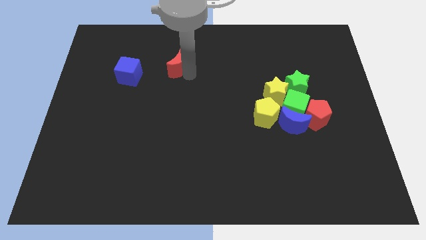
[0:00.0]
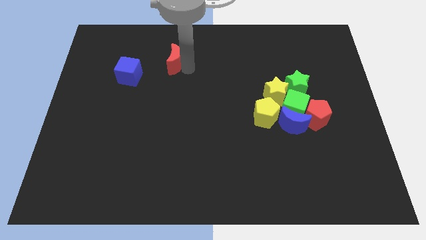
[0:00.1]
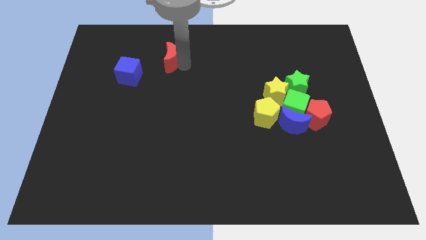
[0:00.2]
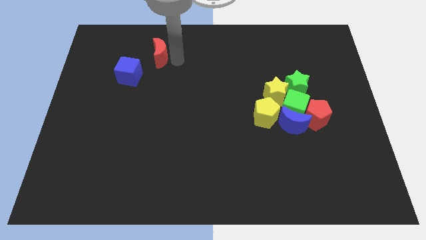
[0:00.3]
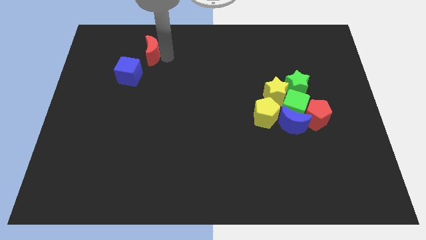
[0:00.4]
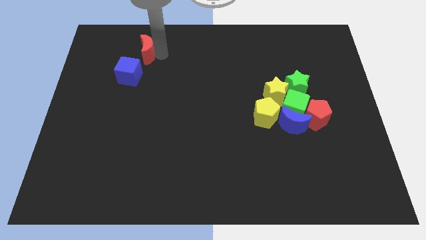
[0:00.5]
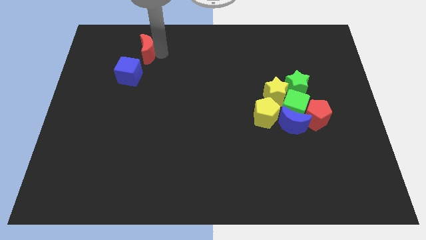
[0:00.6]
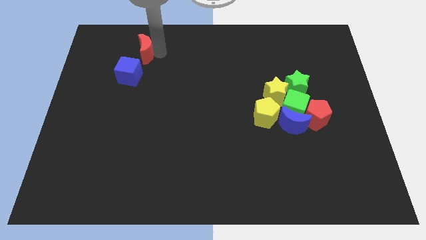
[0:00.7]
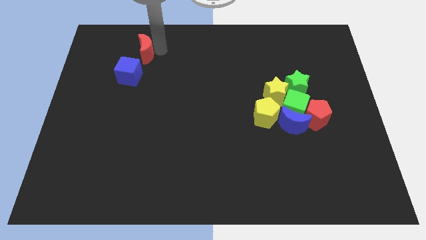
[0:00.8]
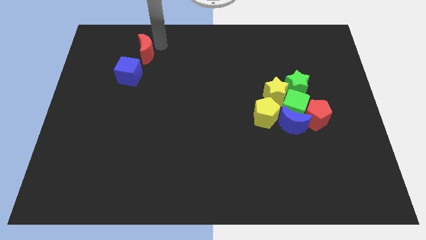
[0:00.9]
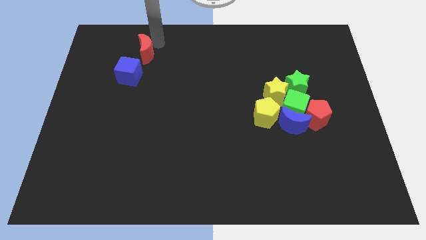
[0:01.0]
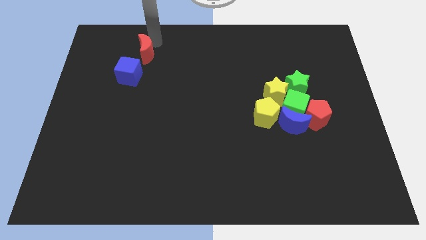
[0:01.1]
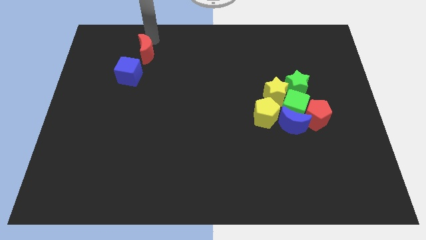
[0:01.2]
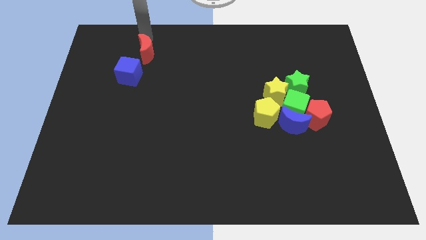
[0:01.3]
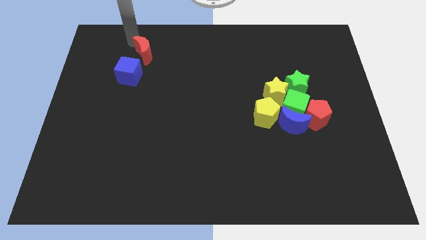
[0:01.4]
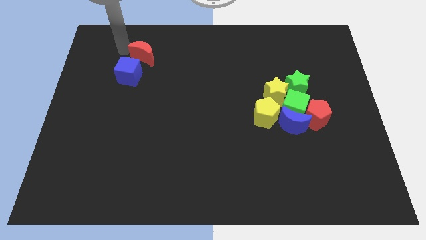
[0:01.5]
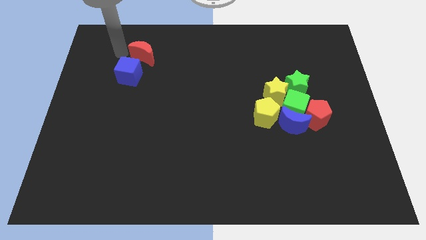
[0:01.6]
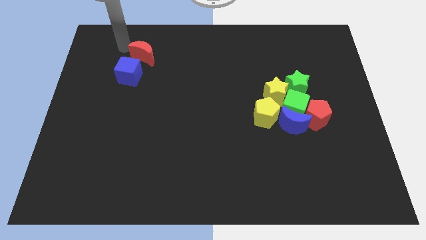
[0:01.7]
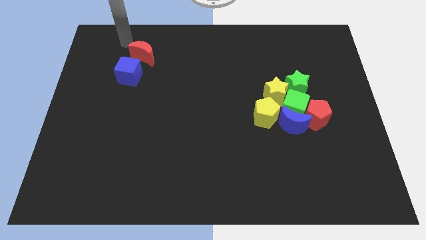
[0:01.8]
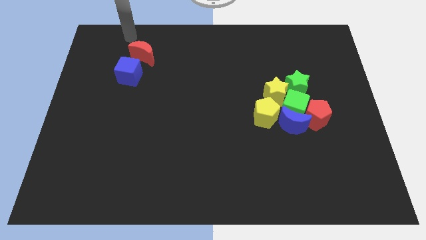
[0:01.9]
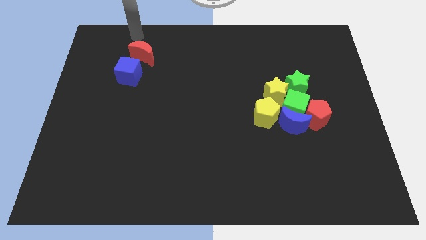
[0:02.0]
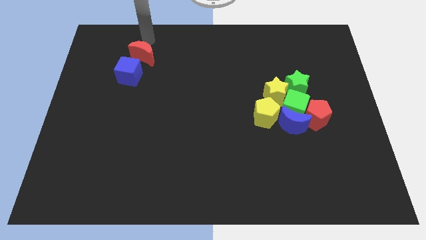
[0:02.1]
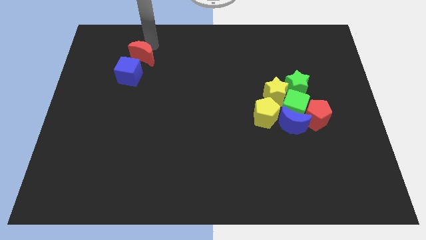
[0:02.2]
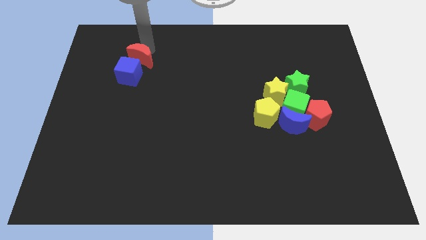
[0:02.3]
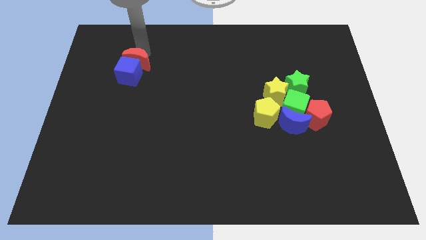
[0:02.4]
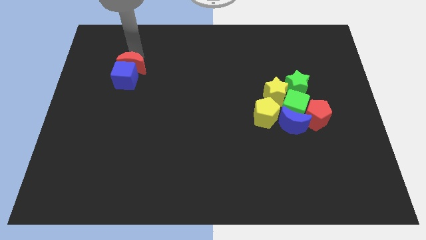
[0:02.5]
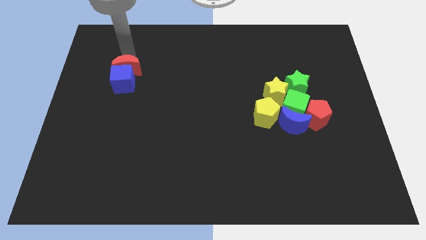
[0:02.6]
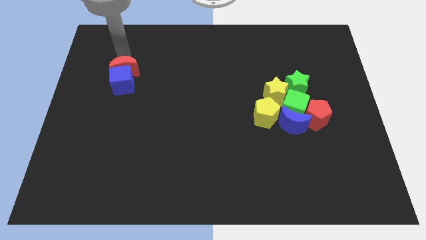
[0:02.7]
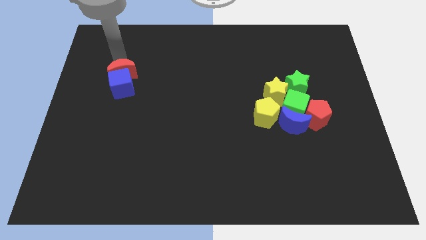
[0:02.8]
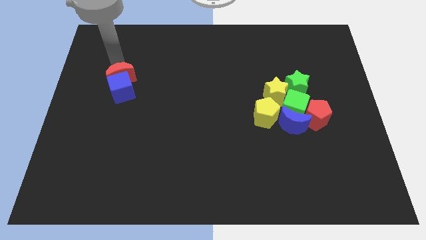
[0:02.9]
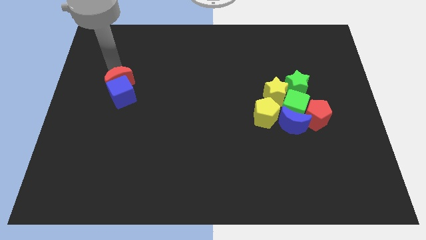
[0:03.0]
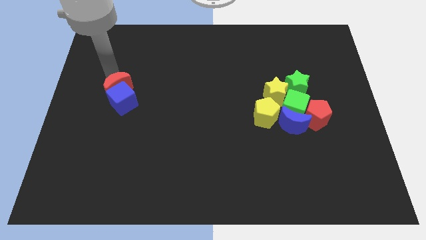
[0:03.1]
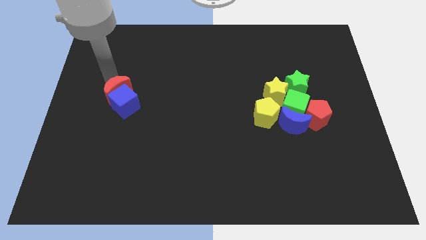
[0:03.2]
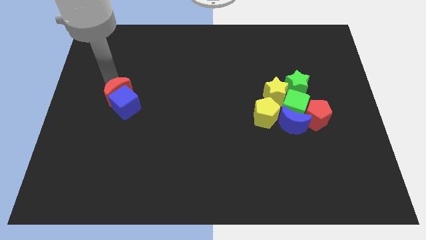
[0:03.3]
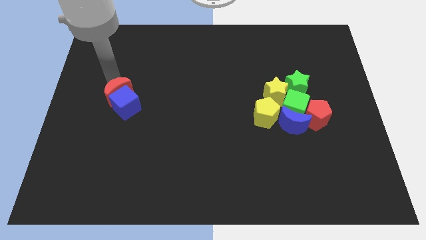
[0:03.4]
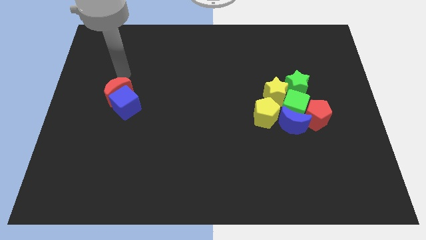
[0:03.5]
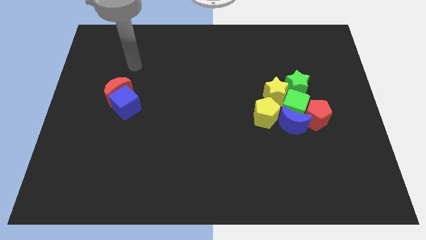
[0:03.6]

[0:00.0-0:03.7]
push the red crescent into the blue cube

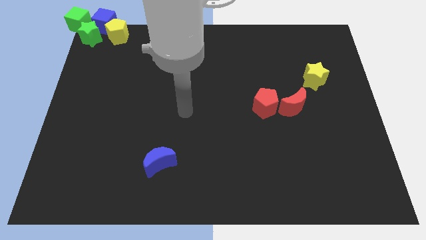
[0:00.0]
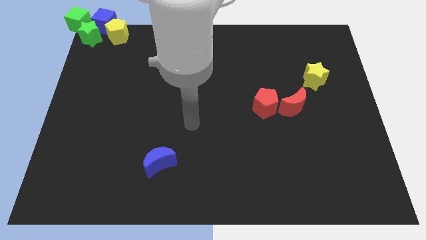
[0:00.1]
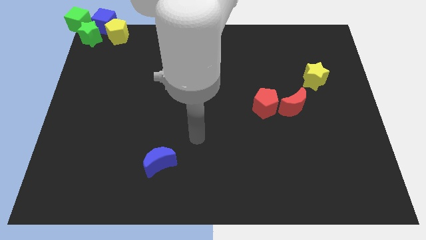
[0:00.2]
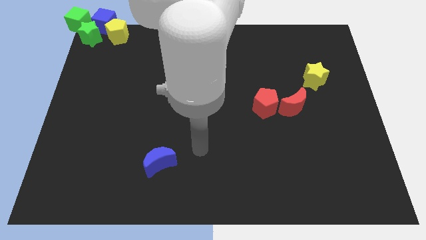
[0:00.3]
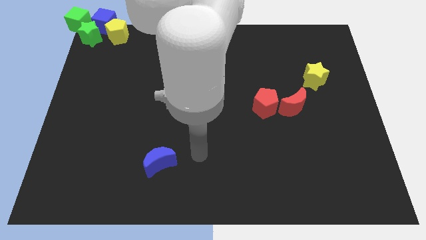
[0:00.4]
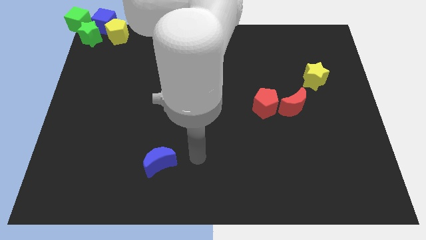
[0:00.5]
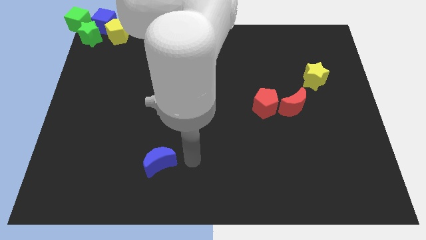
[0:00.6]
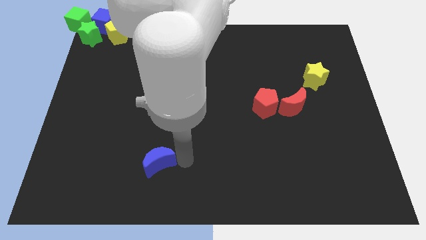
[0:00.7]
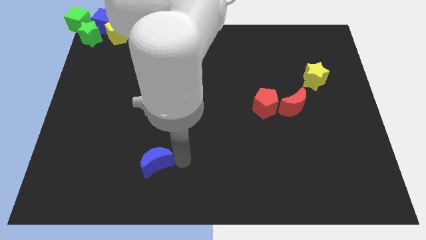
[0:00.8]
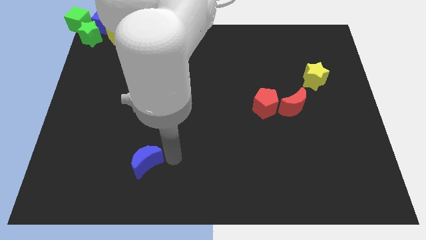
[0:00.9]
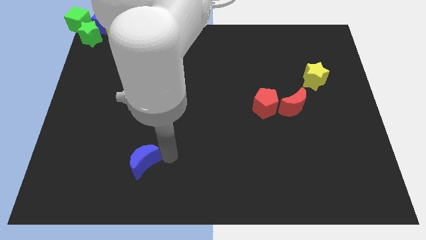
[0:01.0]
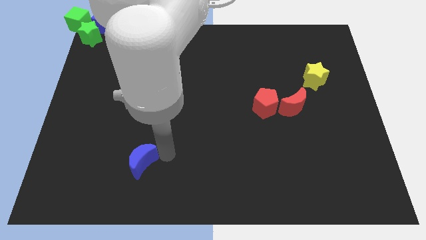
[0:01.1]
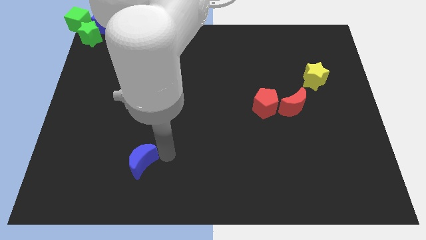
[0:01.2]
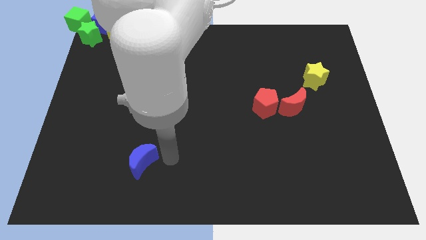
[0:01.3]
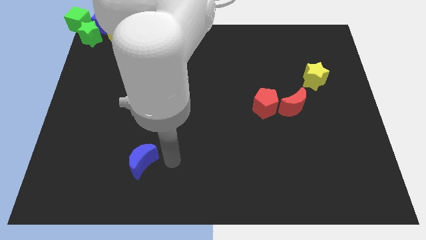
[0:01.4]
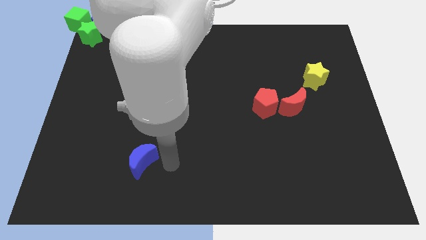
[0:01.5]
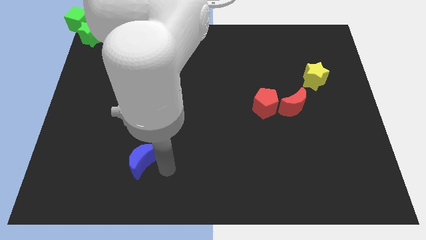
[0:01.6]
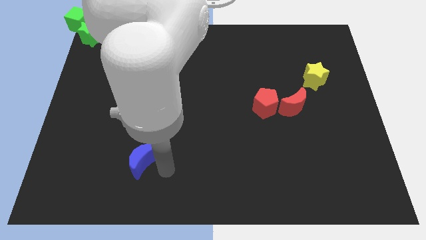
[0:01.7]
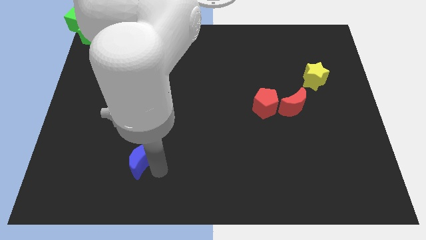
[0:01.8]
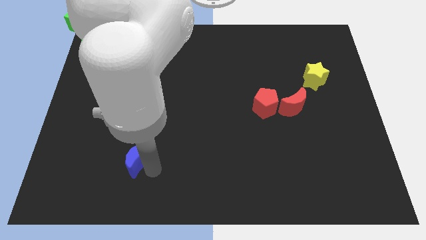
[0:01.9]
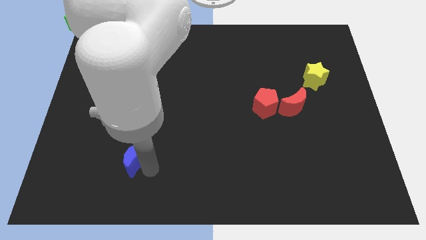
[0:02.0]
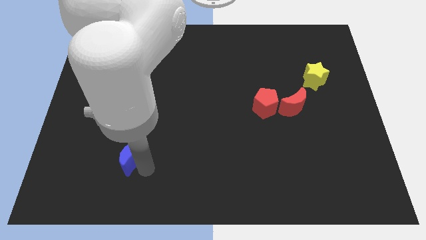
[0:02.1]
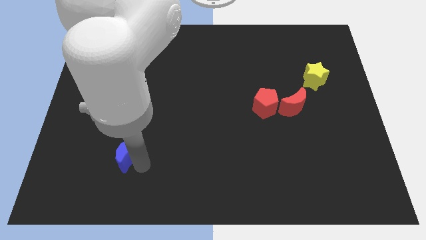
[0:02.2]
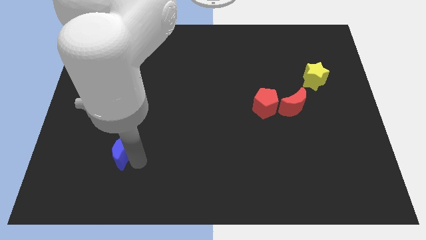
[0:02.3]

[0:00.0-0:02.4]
slightly push the blue crescent to the left side of your arm

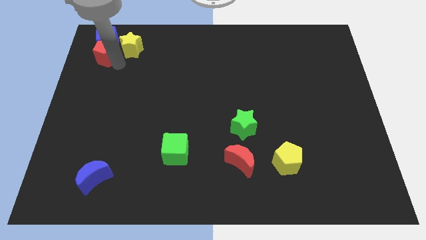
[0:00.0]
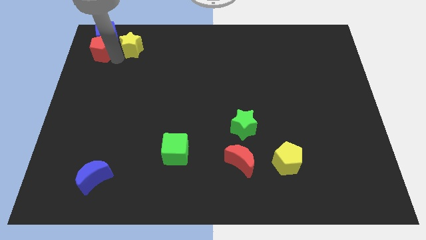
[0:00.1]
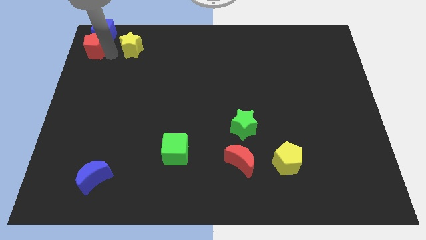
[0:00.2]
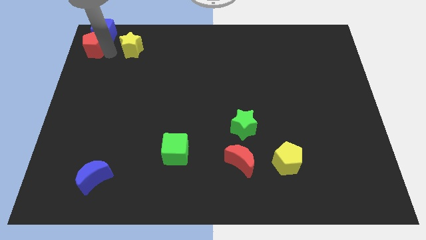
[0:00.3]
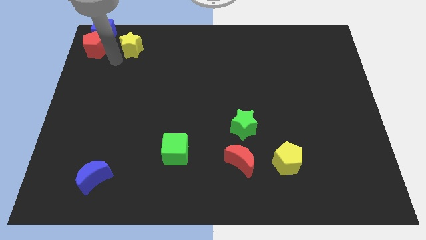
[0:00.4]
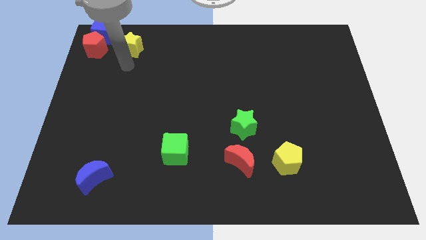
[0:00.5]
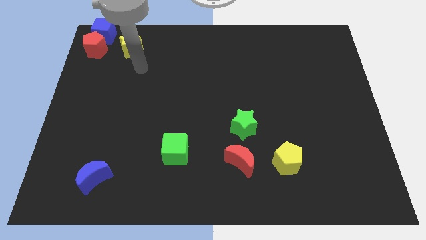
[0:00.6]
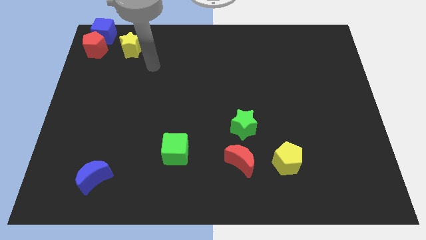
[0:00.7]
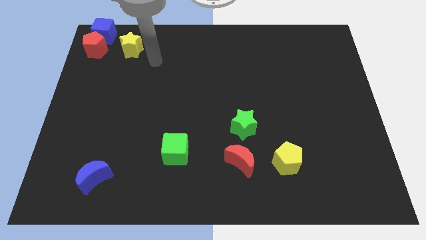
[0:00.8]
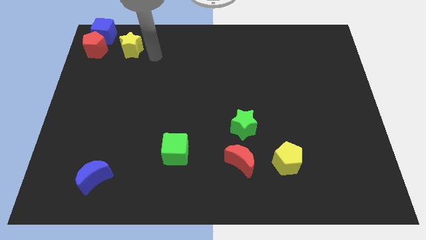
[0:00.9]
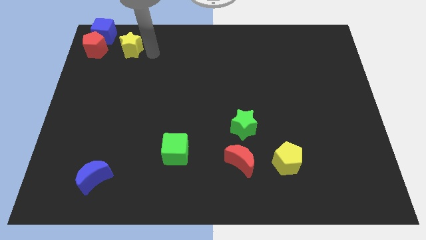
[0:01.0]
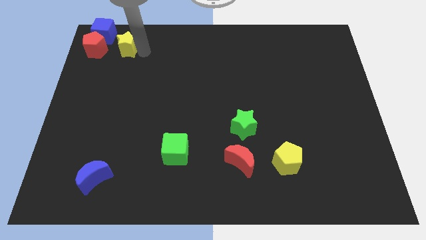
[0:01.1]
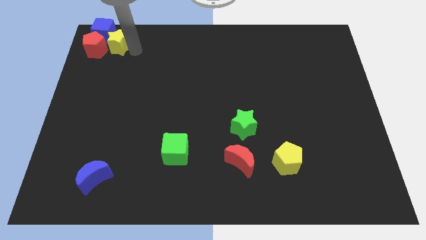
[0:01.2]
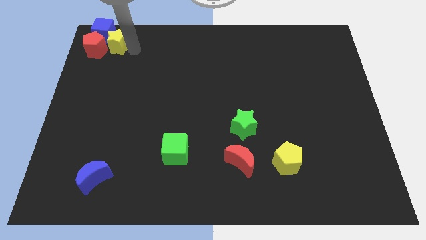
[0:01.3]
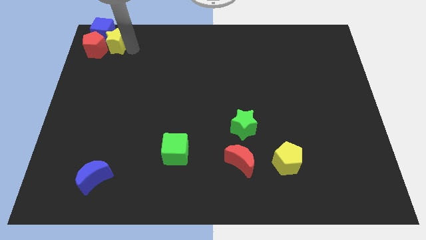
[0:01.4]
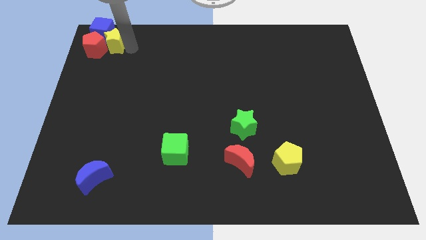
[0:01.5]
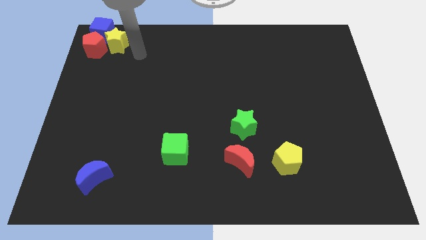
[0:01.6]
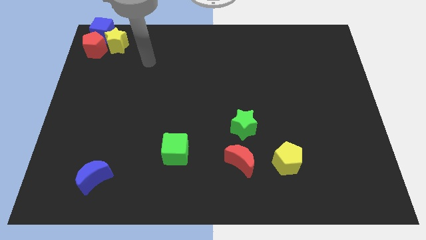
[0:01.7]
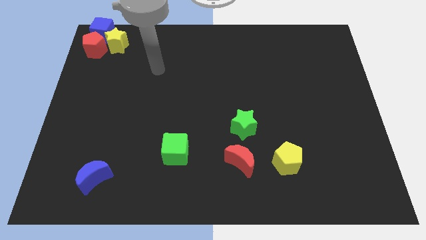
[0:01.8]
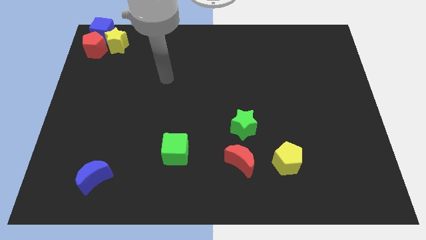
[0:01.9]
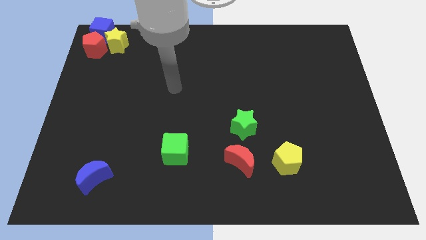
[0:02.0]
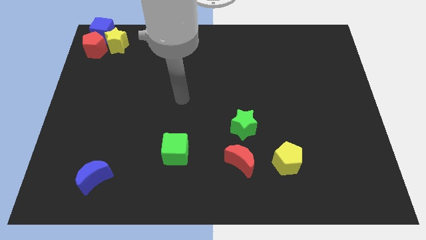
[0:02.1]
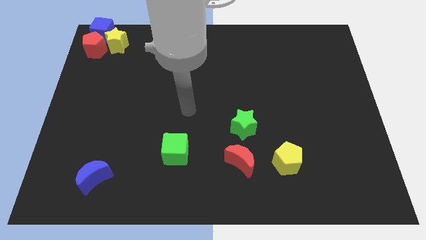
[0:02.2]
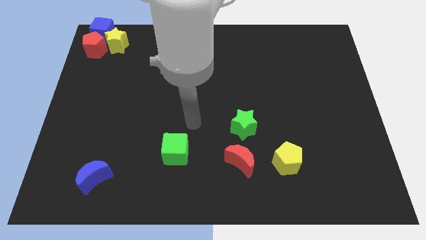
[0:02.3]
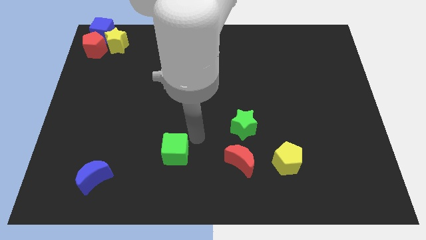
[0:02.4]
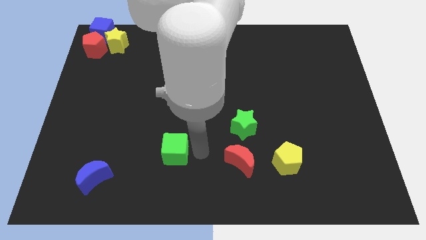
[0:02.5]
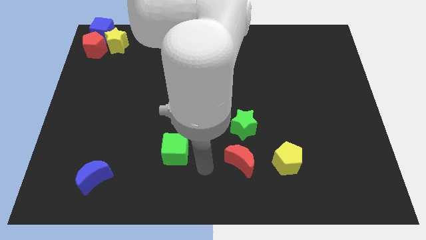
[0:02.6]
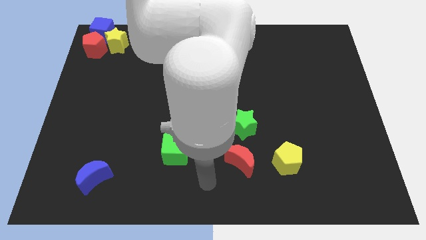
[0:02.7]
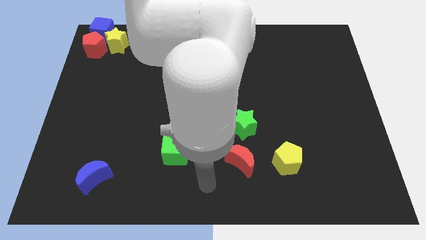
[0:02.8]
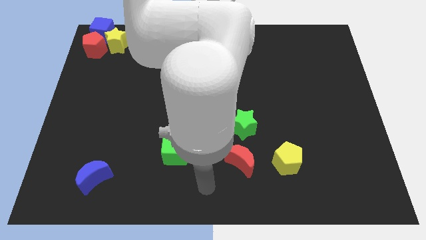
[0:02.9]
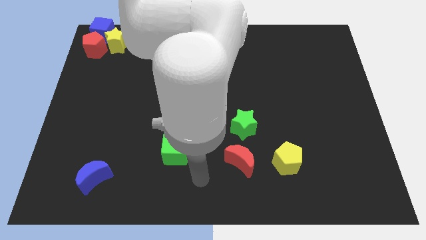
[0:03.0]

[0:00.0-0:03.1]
slide the yellow star at bottom right side of the blue cube
